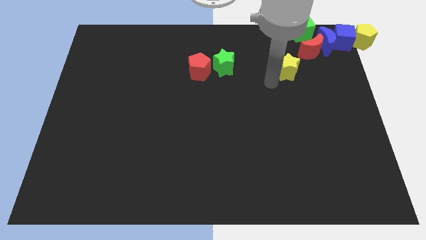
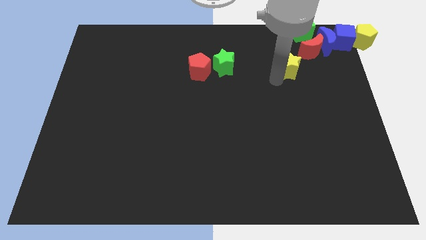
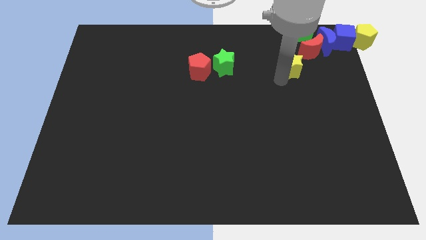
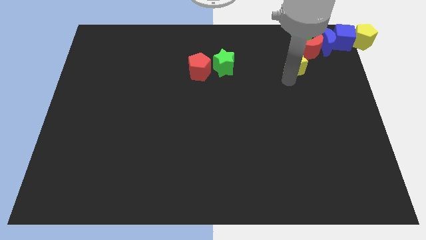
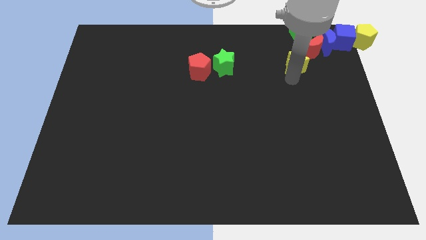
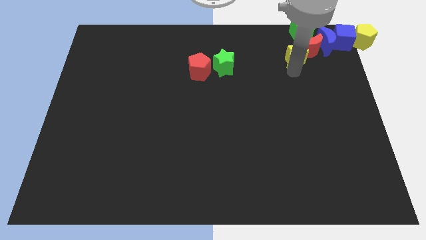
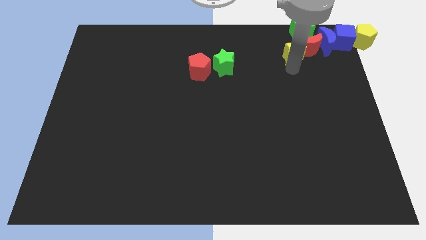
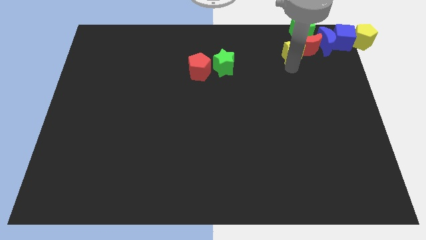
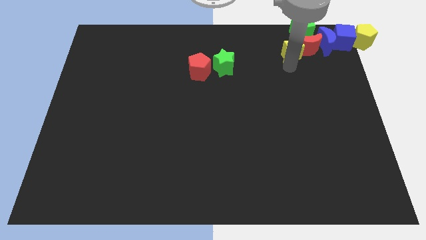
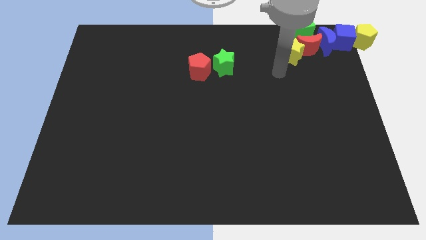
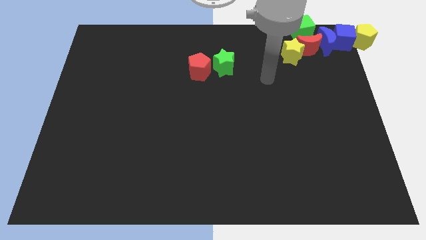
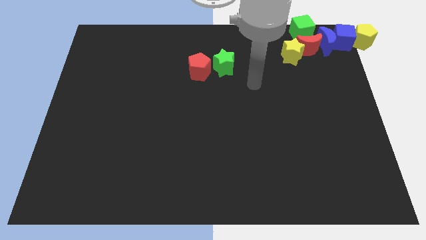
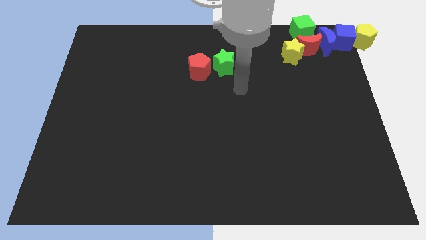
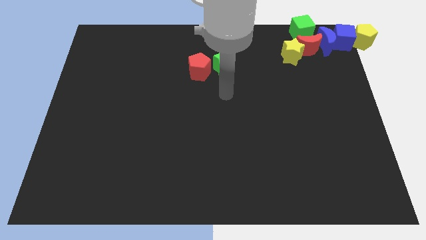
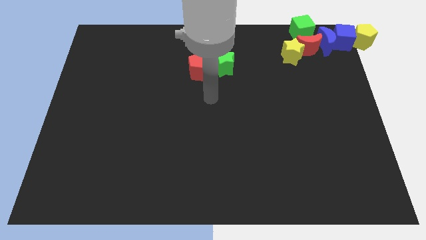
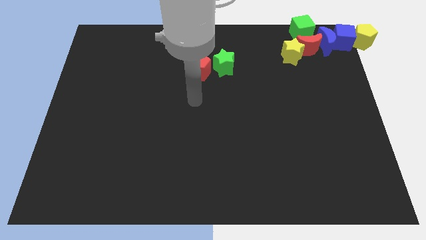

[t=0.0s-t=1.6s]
push the yellow star into the red crescent

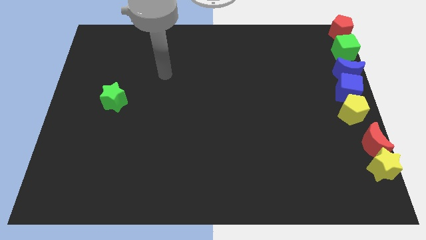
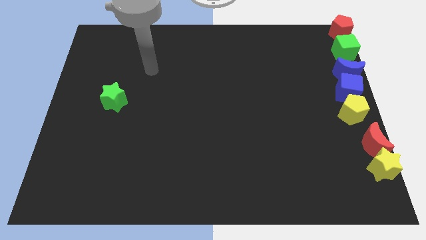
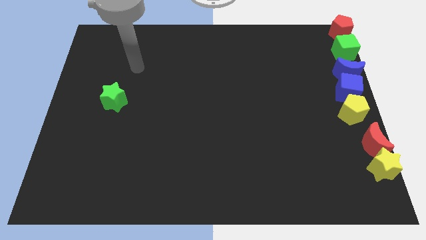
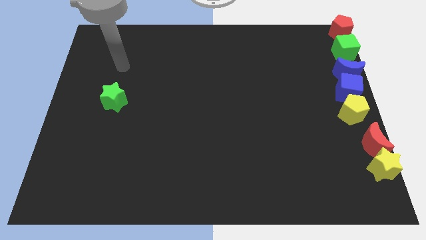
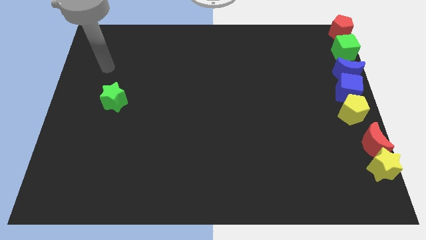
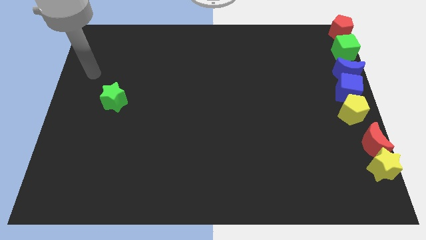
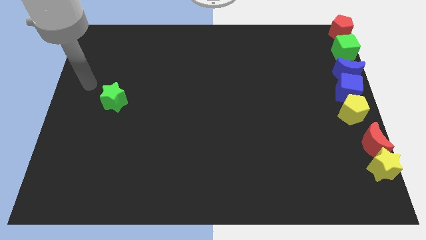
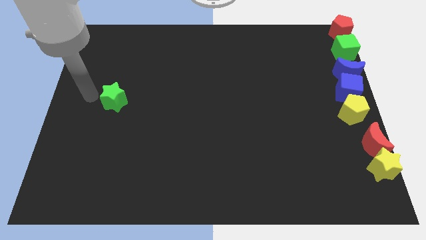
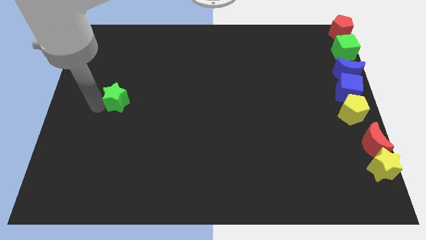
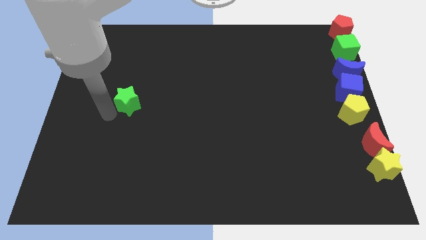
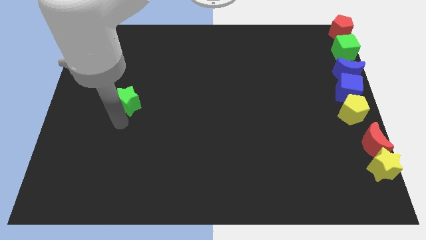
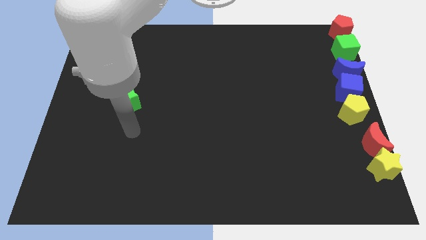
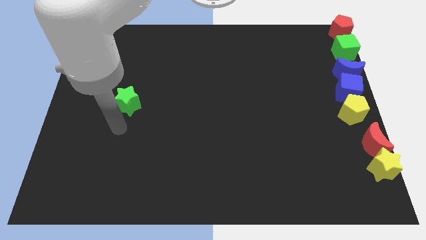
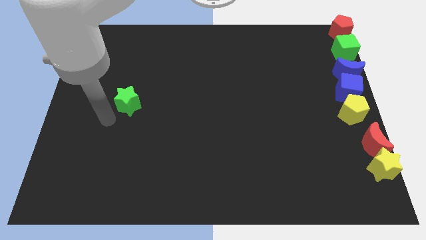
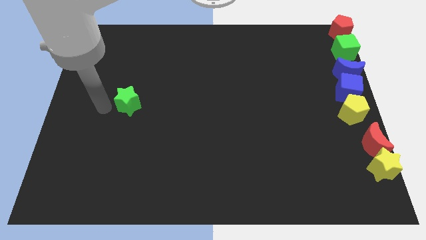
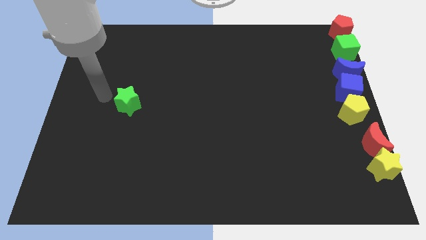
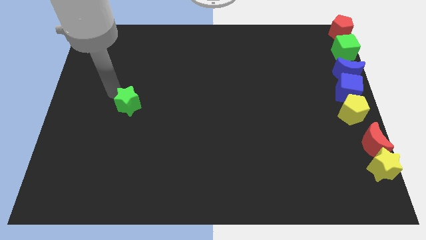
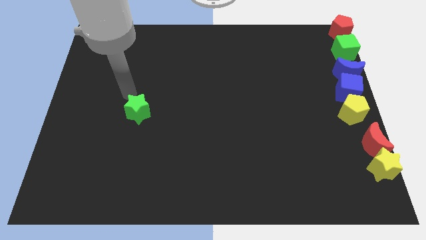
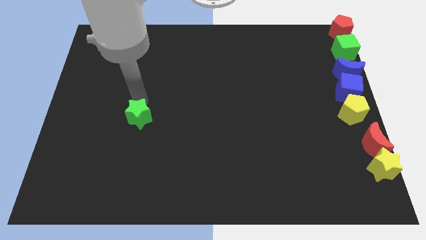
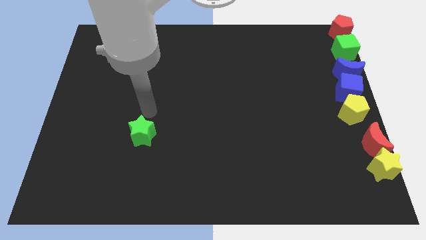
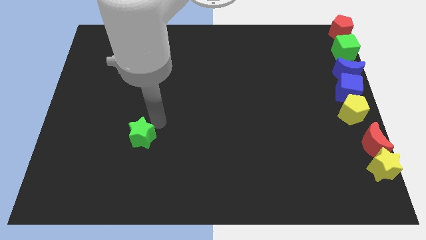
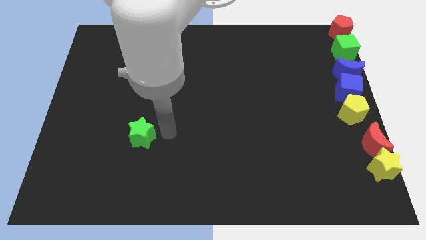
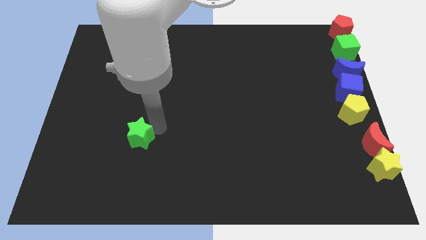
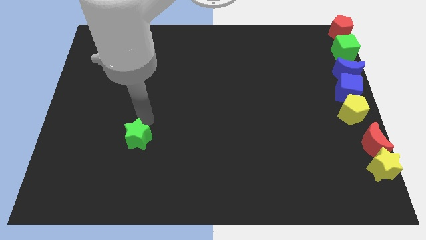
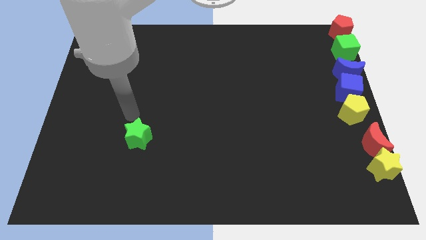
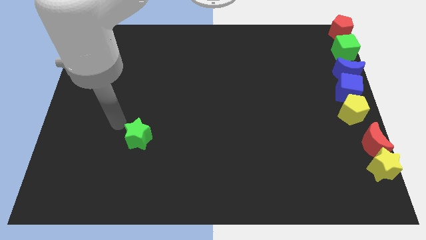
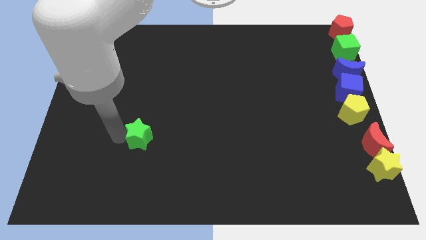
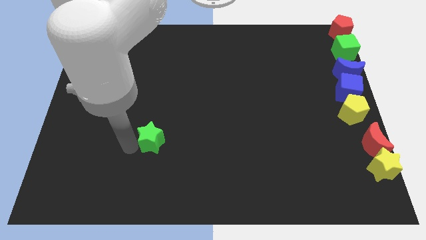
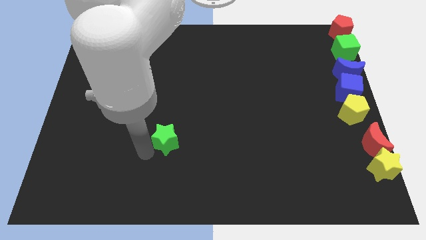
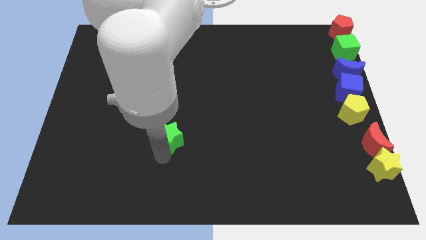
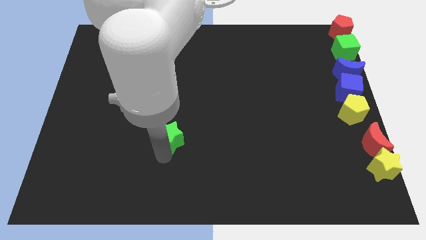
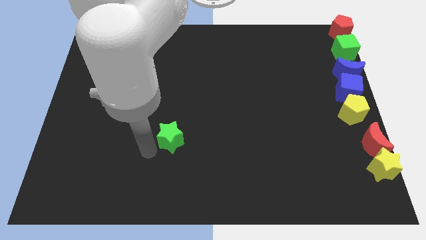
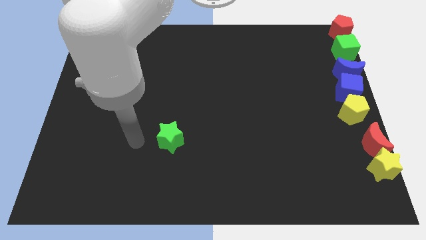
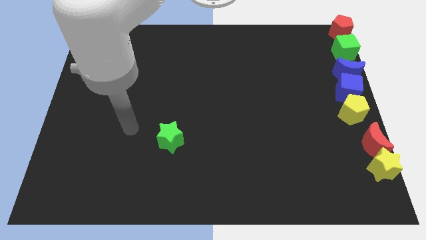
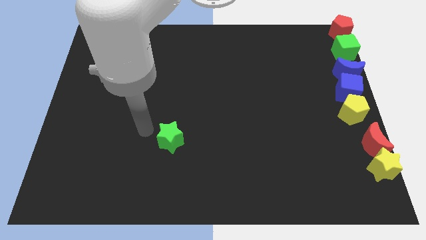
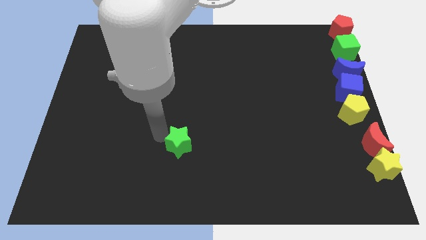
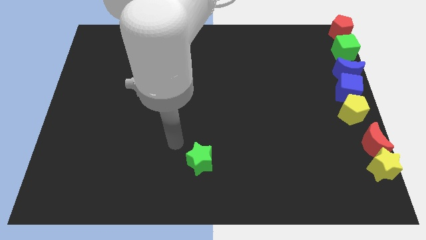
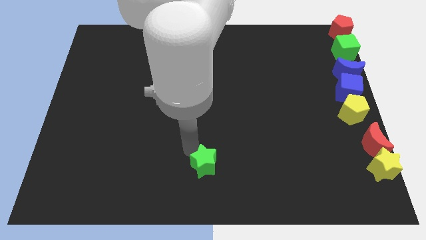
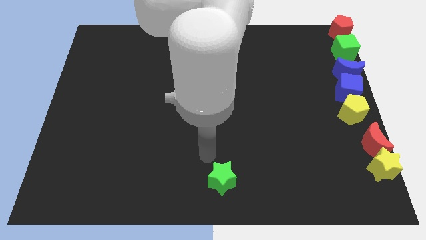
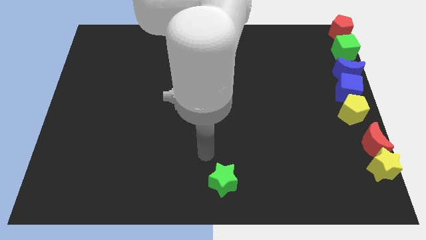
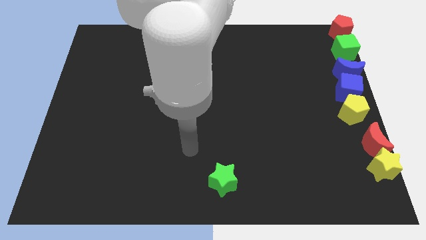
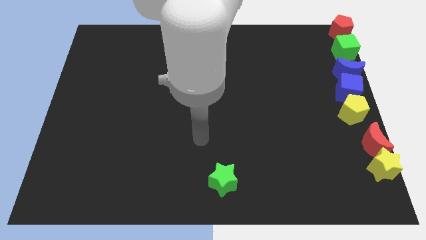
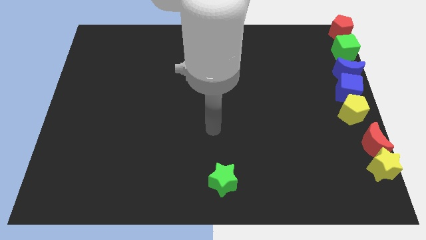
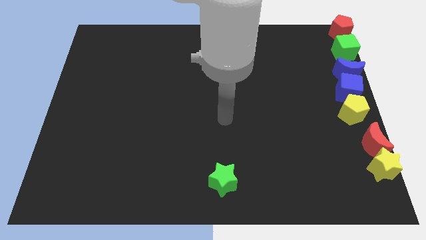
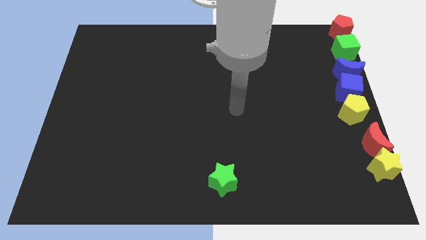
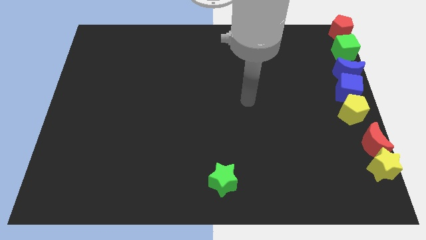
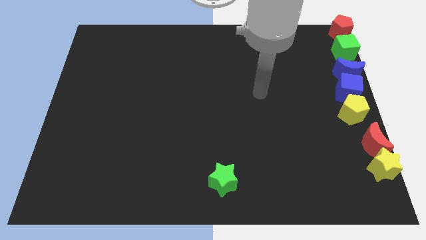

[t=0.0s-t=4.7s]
move the green star to the bottom center of the board

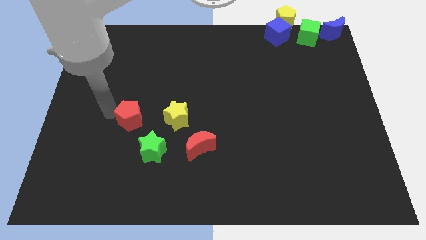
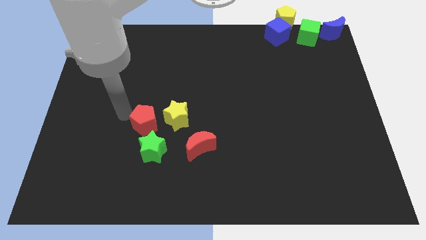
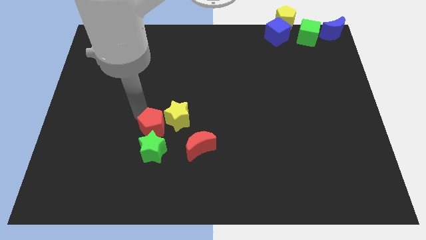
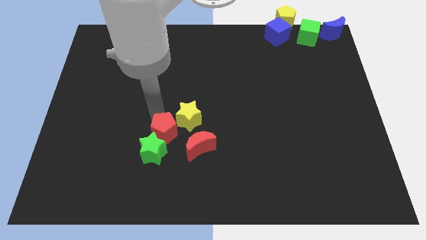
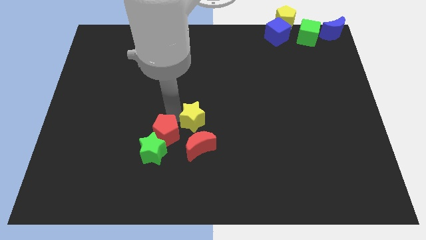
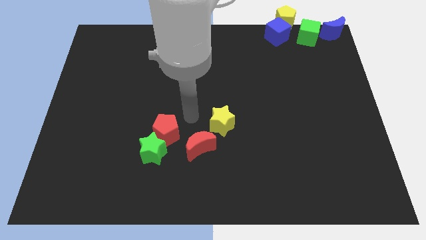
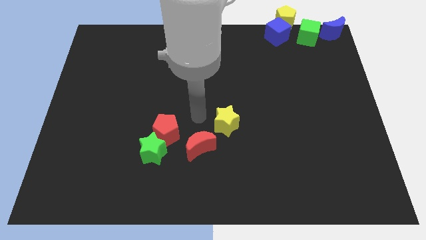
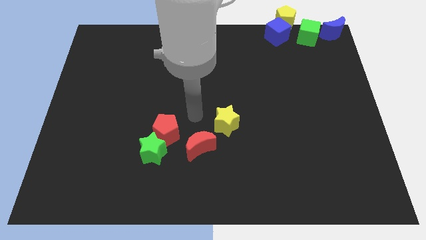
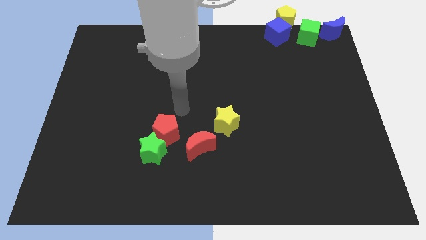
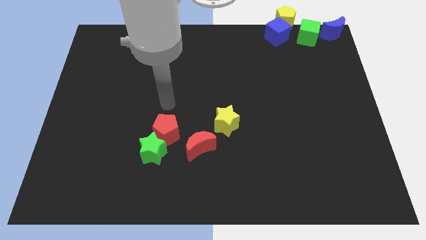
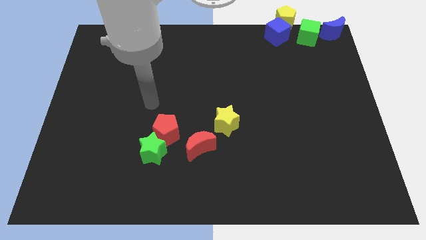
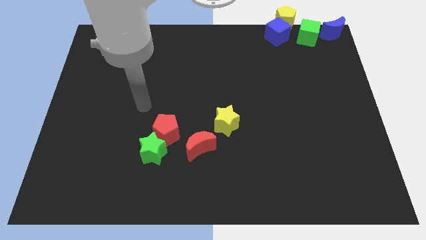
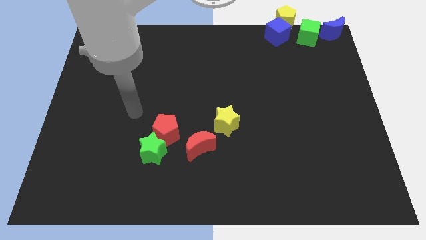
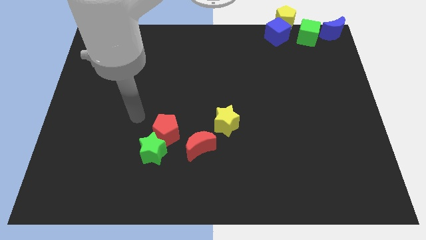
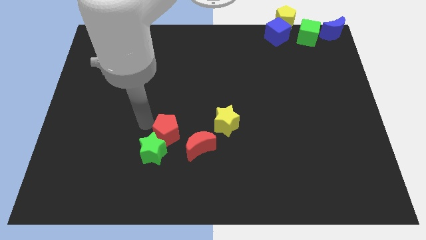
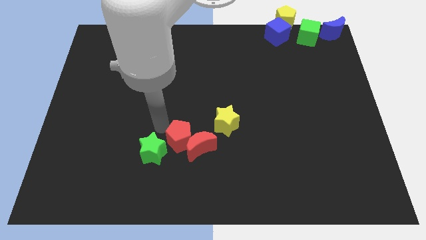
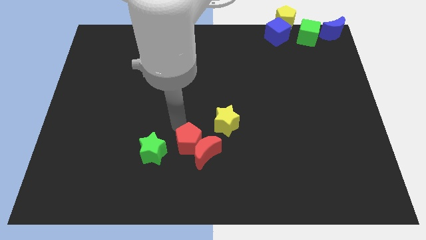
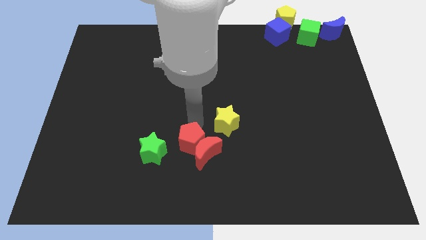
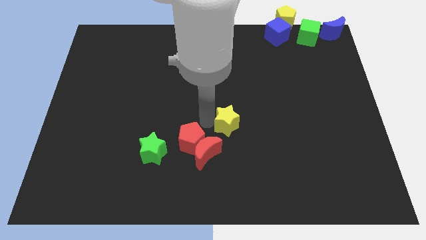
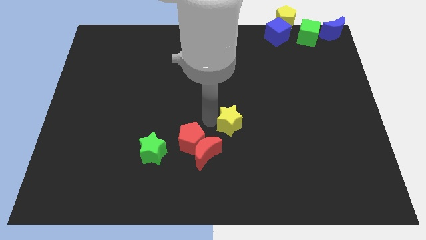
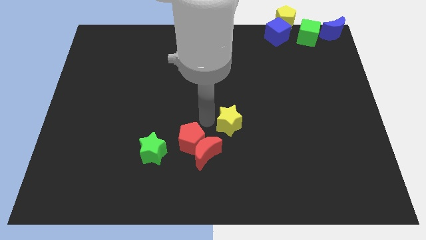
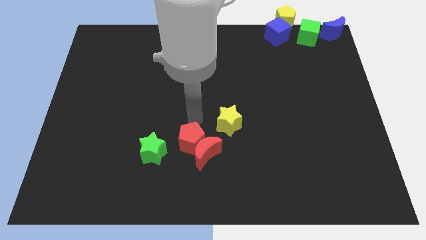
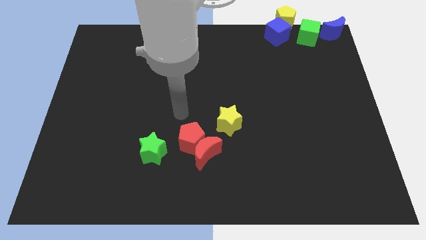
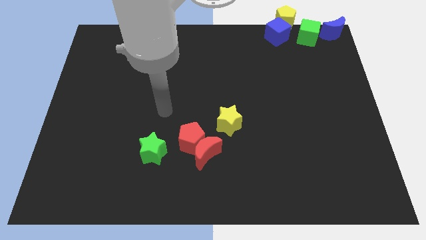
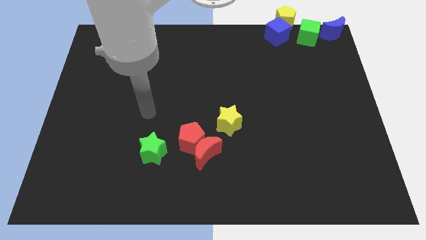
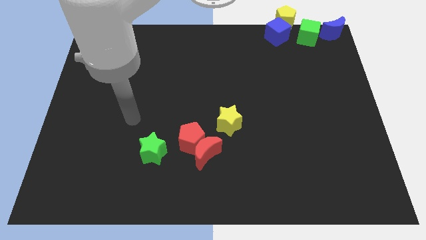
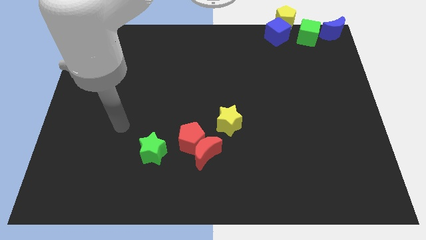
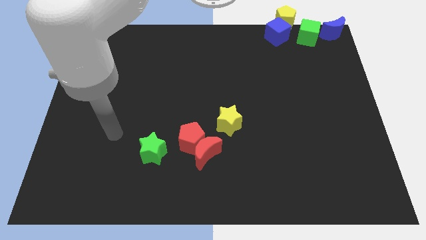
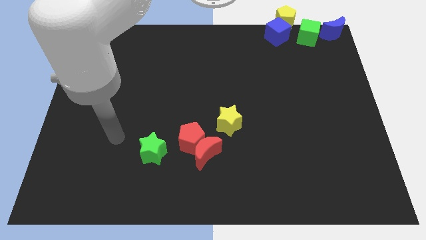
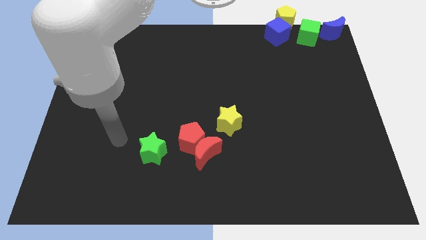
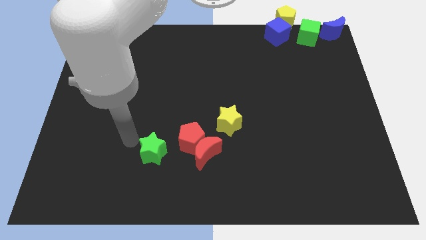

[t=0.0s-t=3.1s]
push the red pentagon into the red crescent
